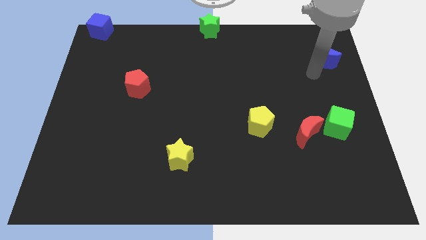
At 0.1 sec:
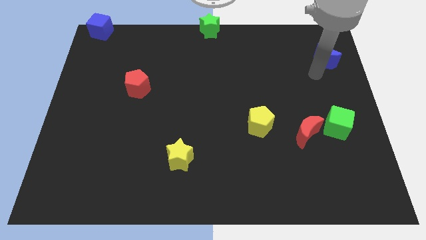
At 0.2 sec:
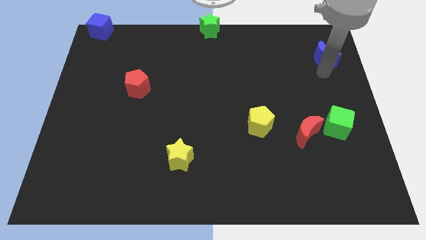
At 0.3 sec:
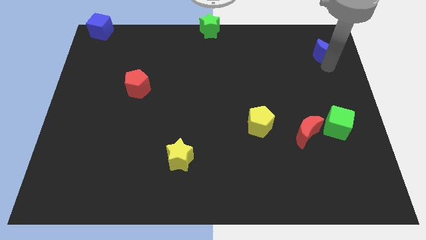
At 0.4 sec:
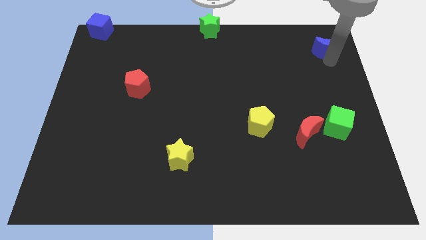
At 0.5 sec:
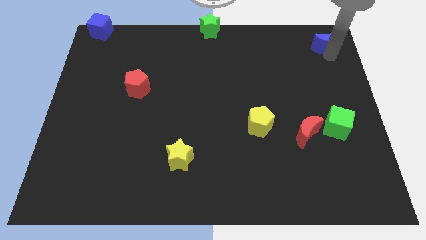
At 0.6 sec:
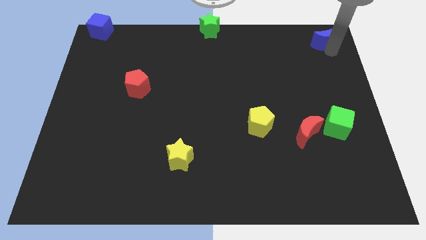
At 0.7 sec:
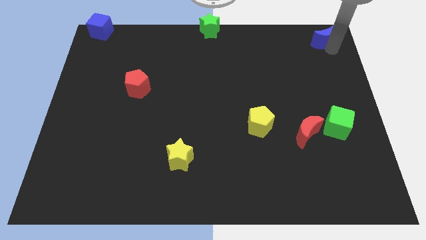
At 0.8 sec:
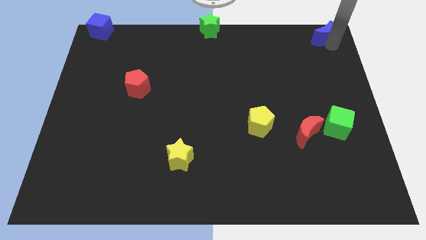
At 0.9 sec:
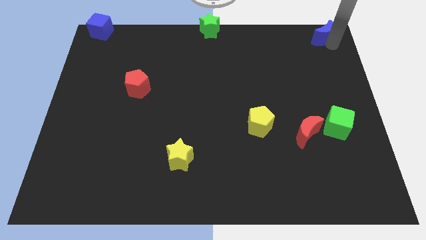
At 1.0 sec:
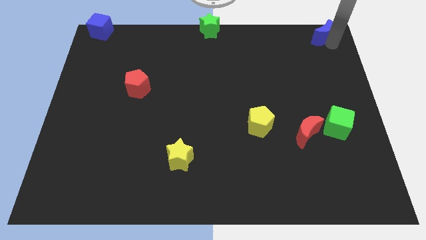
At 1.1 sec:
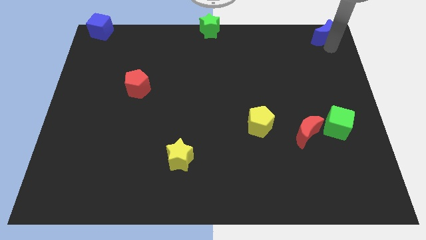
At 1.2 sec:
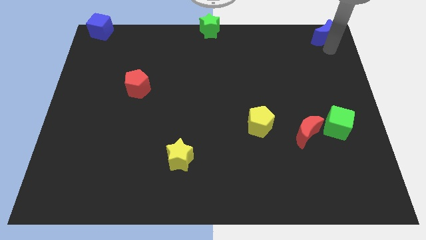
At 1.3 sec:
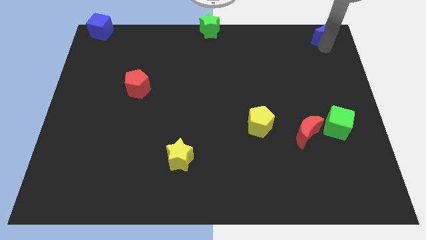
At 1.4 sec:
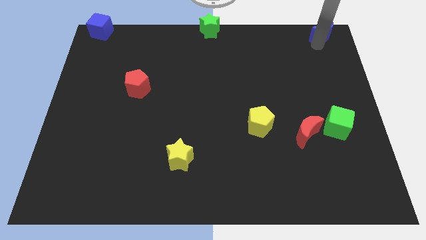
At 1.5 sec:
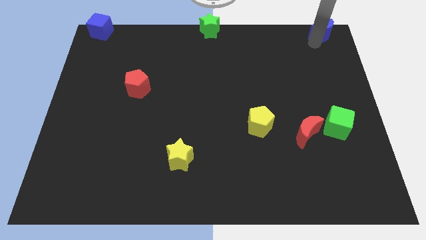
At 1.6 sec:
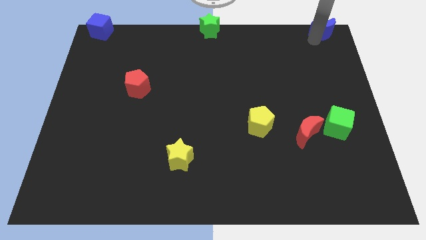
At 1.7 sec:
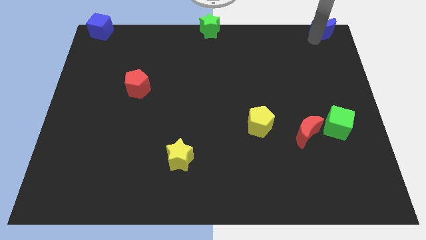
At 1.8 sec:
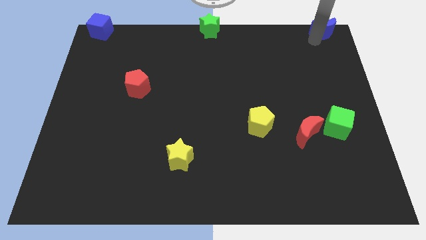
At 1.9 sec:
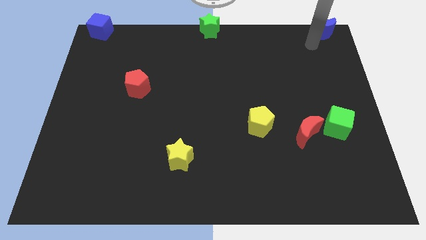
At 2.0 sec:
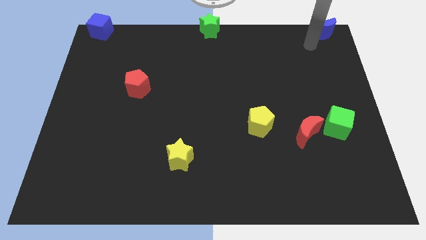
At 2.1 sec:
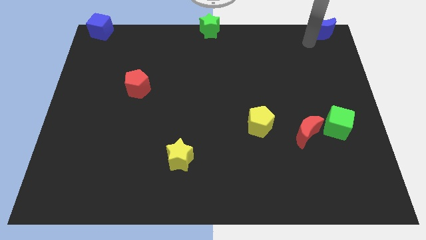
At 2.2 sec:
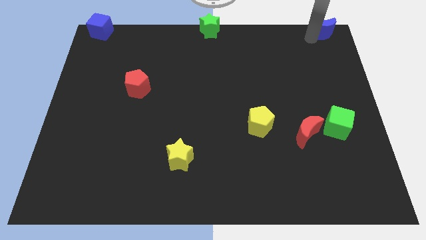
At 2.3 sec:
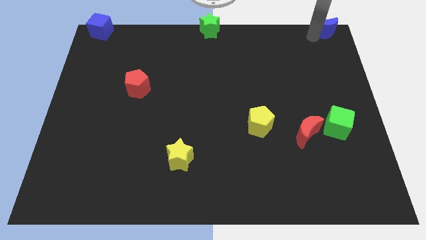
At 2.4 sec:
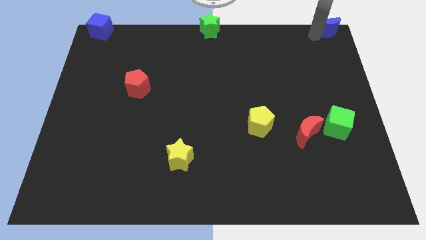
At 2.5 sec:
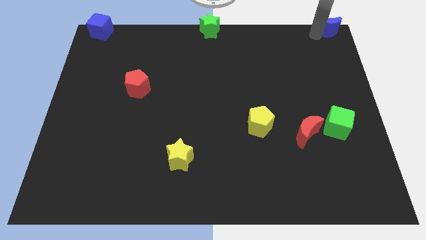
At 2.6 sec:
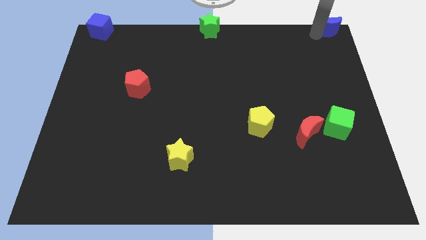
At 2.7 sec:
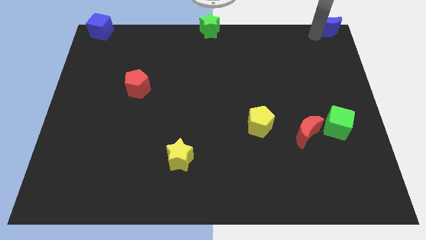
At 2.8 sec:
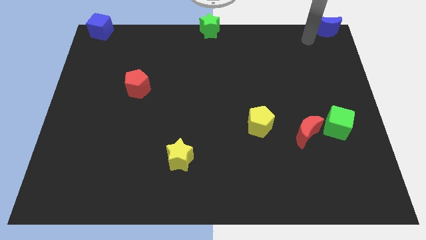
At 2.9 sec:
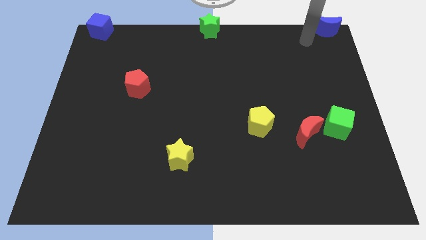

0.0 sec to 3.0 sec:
place blue crescent towards top right corner

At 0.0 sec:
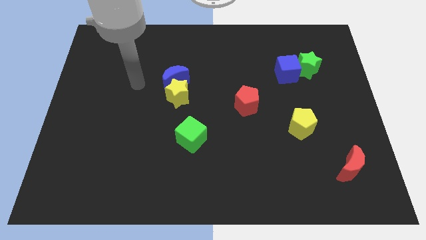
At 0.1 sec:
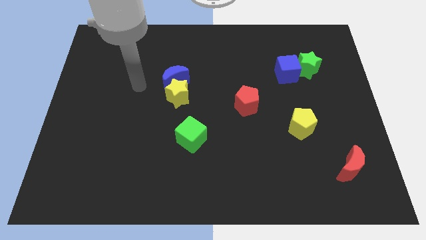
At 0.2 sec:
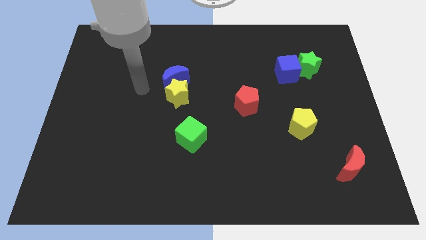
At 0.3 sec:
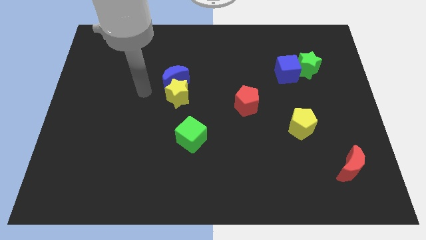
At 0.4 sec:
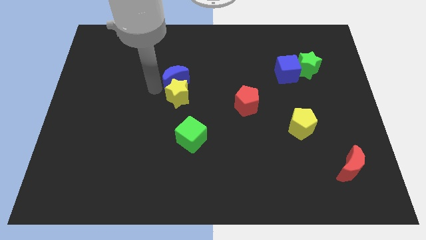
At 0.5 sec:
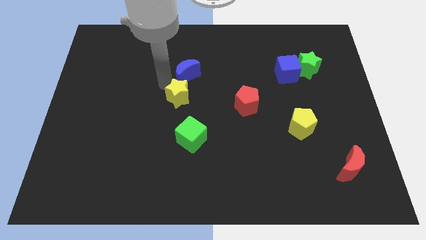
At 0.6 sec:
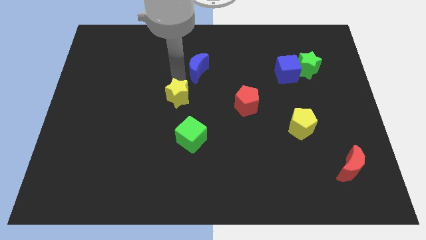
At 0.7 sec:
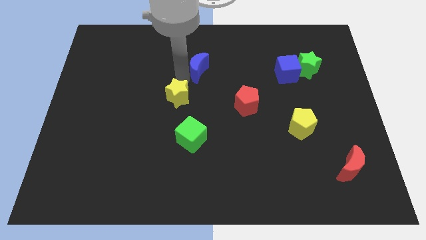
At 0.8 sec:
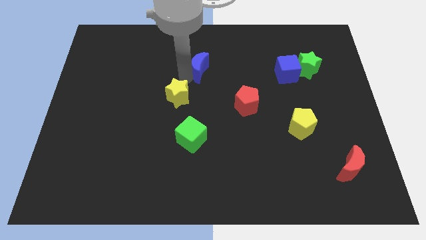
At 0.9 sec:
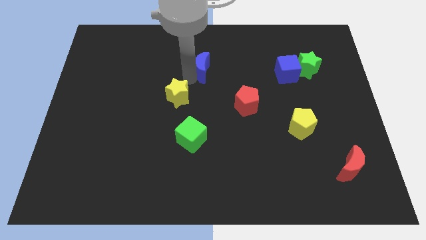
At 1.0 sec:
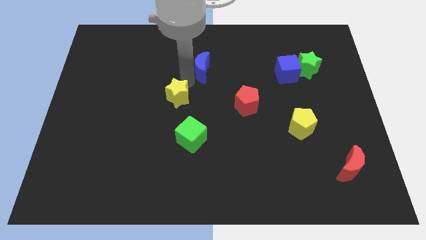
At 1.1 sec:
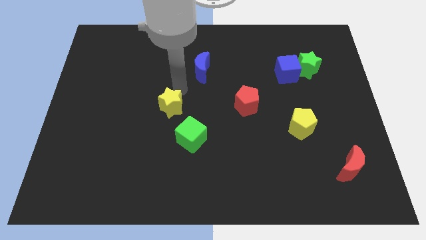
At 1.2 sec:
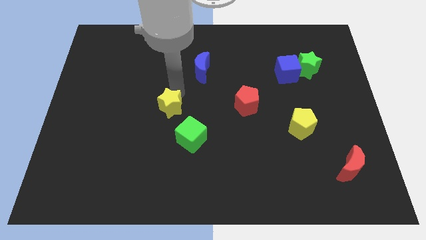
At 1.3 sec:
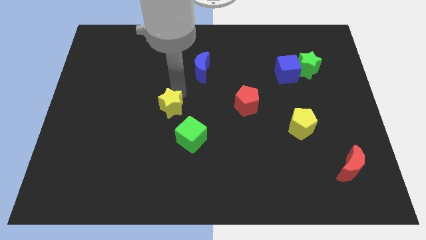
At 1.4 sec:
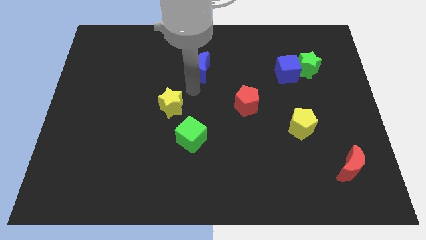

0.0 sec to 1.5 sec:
place the blue moon above the red pentagon

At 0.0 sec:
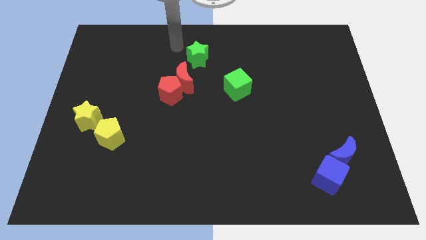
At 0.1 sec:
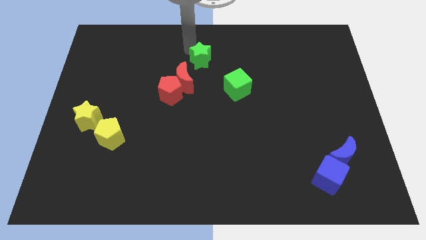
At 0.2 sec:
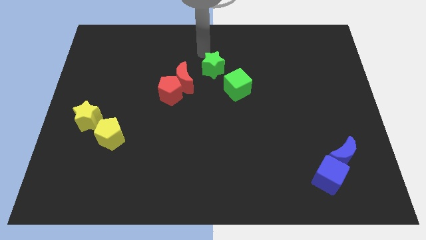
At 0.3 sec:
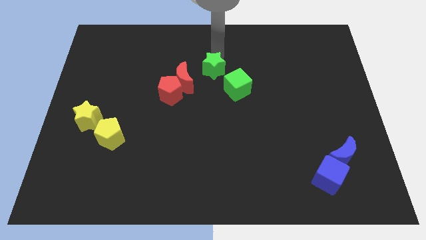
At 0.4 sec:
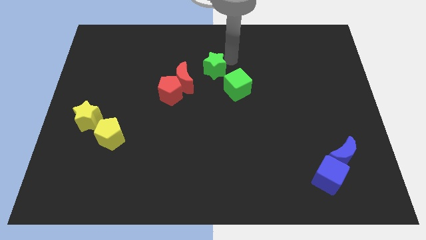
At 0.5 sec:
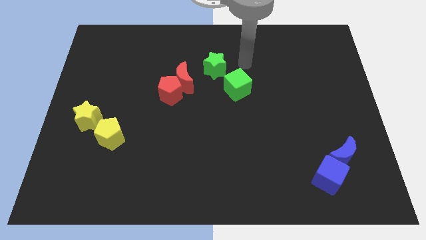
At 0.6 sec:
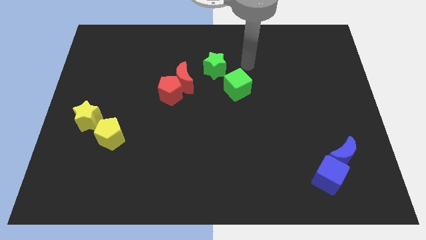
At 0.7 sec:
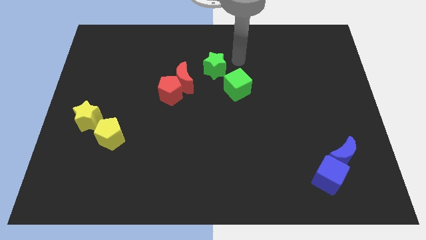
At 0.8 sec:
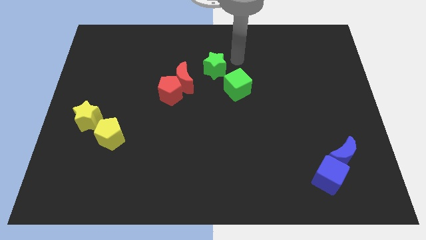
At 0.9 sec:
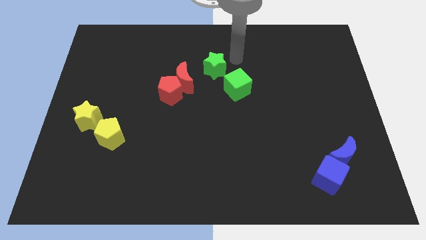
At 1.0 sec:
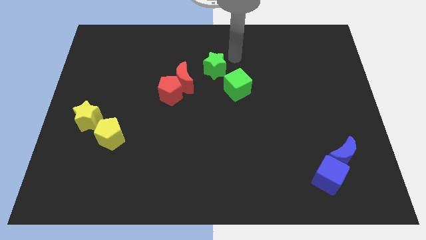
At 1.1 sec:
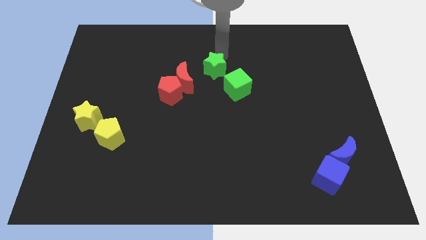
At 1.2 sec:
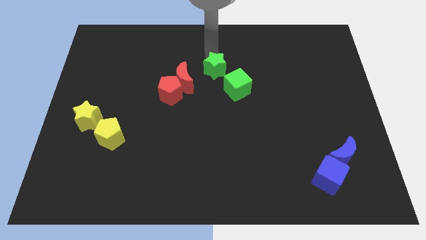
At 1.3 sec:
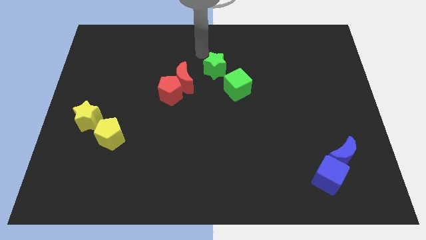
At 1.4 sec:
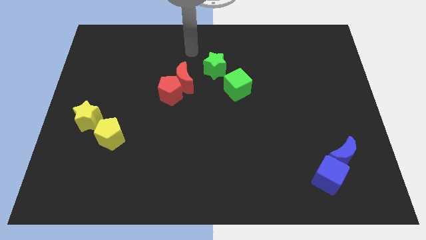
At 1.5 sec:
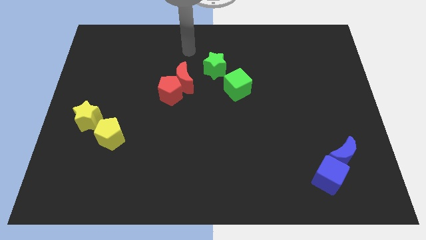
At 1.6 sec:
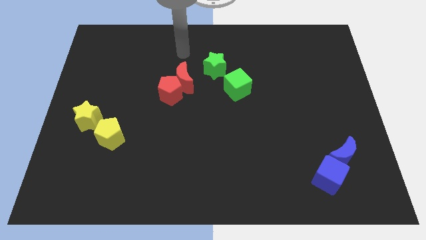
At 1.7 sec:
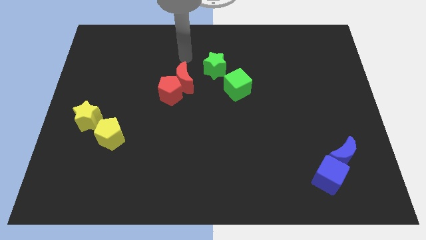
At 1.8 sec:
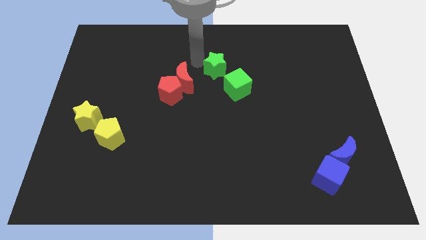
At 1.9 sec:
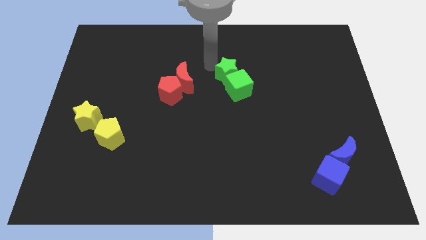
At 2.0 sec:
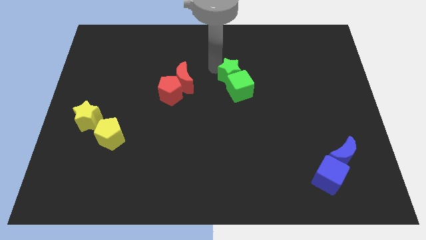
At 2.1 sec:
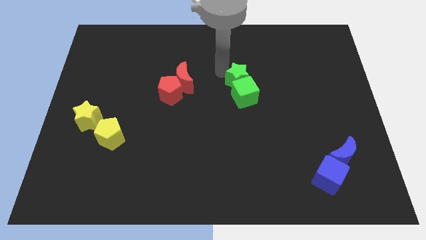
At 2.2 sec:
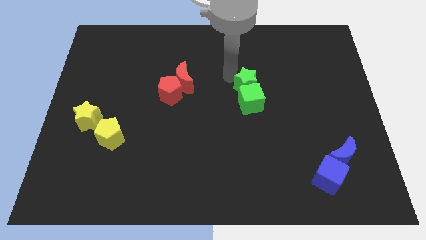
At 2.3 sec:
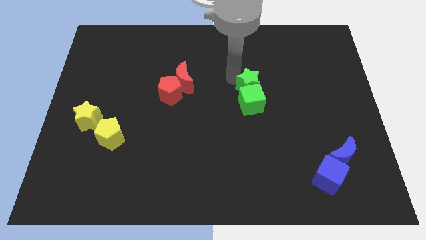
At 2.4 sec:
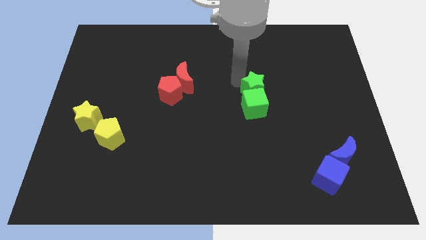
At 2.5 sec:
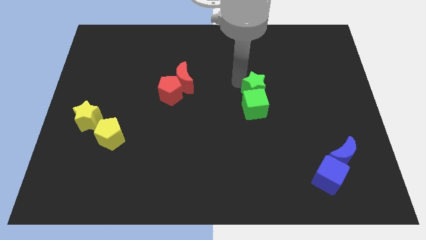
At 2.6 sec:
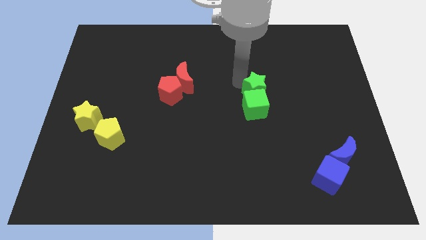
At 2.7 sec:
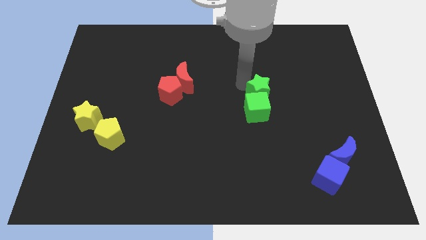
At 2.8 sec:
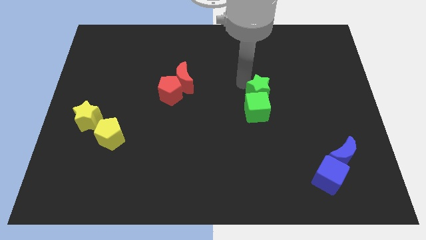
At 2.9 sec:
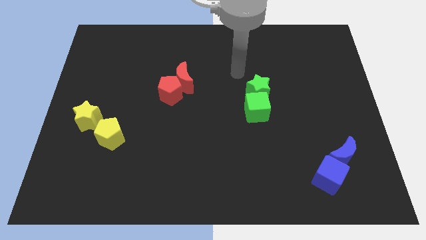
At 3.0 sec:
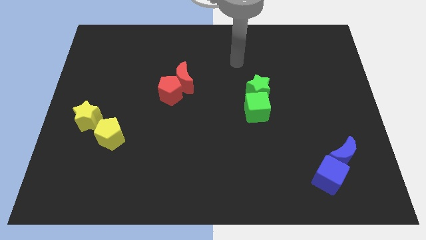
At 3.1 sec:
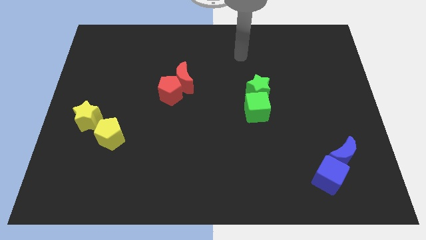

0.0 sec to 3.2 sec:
push the green star and green cube to the center

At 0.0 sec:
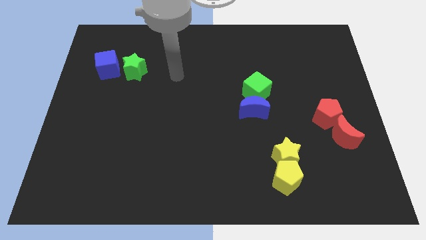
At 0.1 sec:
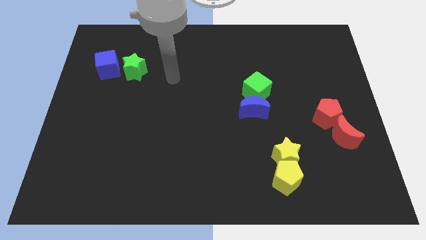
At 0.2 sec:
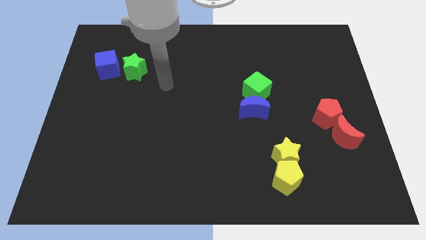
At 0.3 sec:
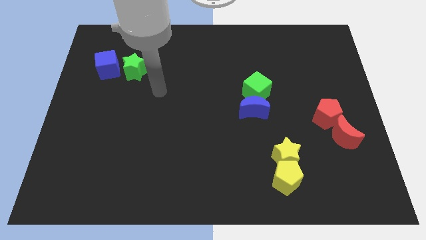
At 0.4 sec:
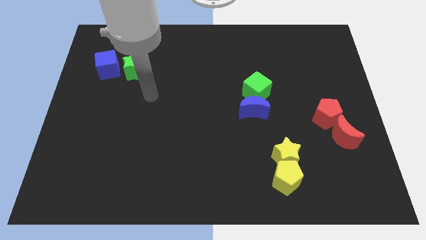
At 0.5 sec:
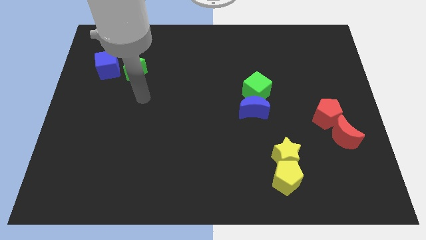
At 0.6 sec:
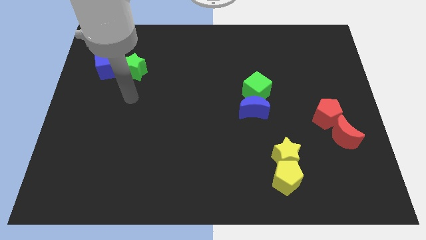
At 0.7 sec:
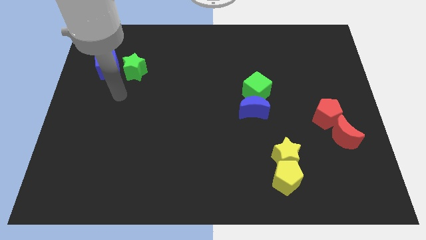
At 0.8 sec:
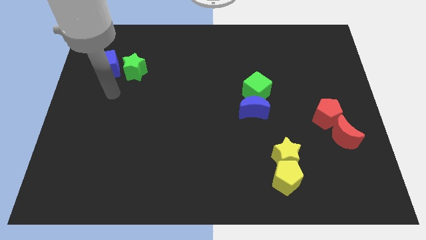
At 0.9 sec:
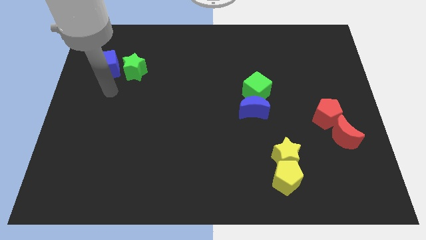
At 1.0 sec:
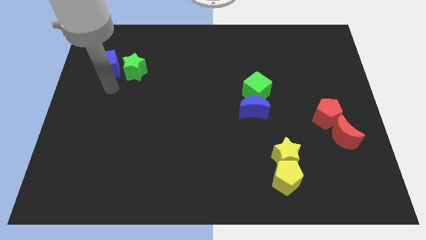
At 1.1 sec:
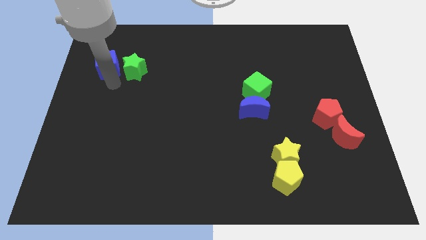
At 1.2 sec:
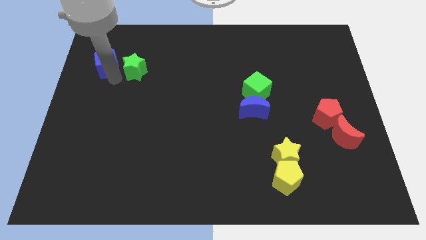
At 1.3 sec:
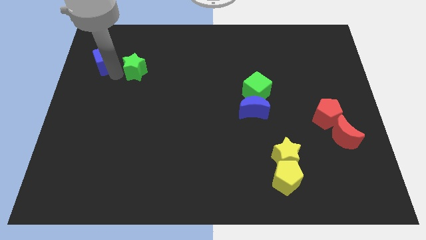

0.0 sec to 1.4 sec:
touch the blue cube
